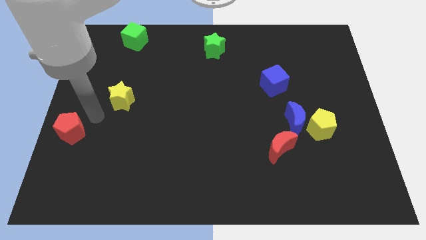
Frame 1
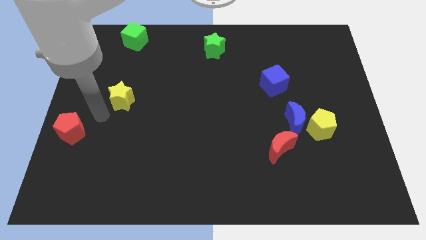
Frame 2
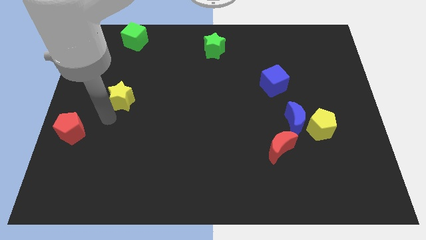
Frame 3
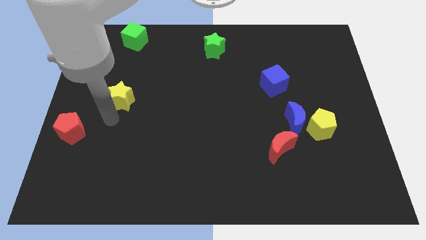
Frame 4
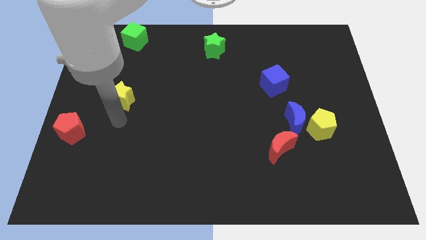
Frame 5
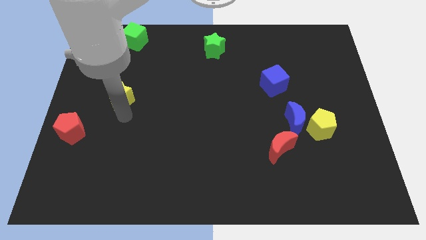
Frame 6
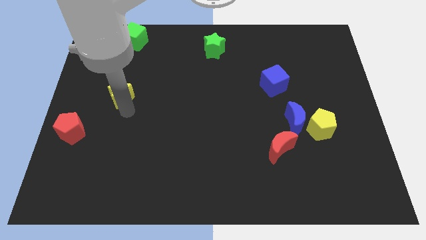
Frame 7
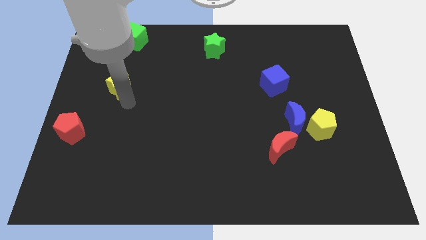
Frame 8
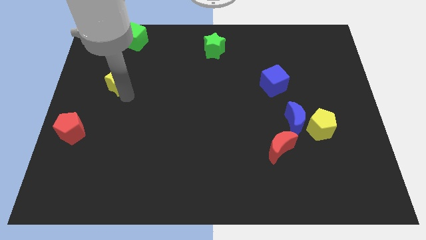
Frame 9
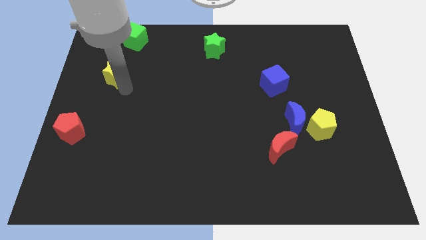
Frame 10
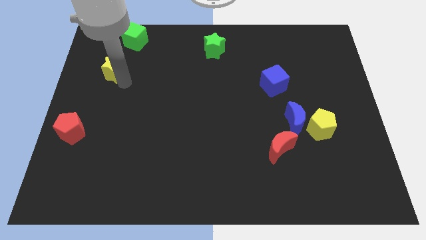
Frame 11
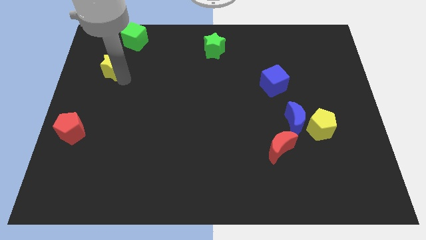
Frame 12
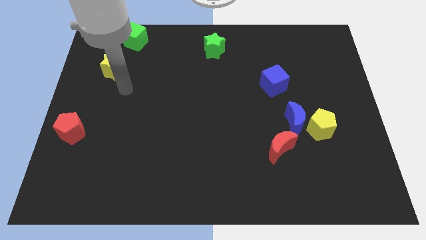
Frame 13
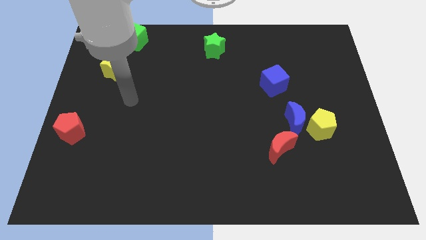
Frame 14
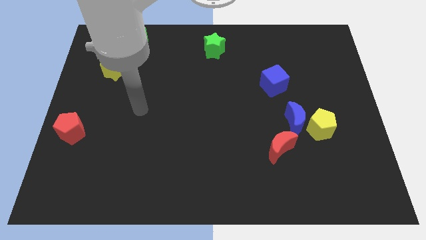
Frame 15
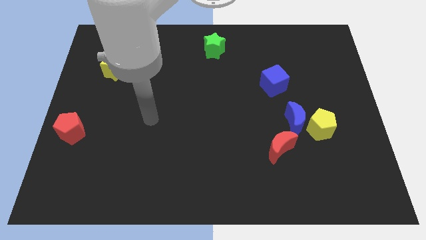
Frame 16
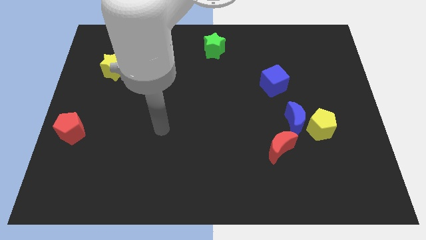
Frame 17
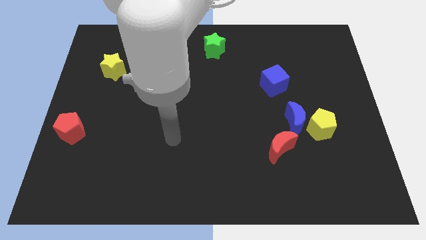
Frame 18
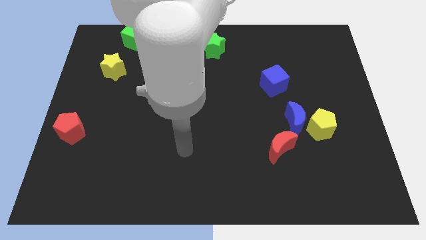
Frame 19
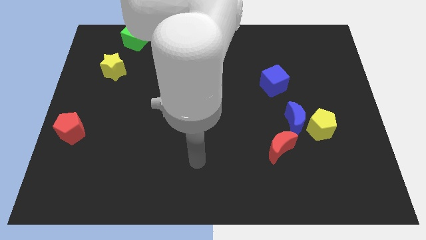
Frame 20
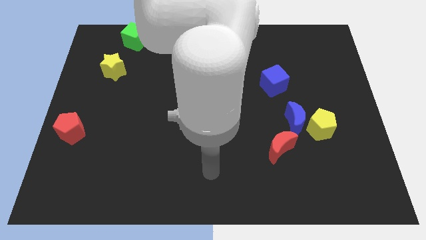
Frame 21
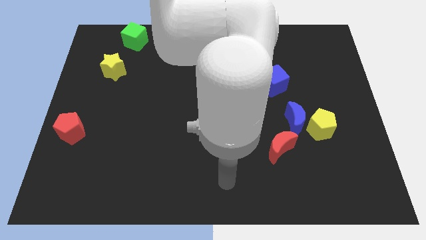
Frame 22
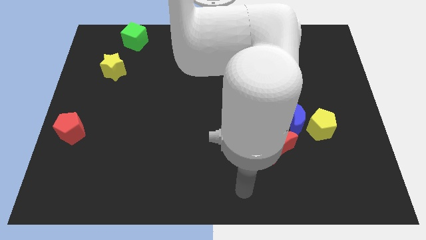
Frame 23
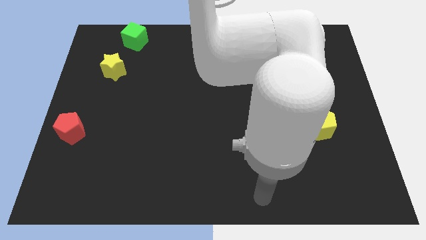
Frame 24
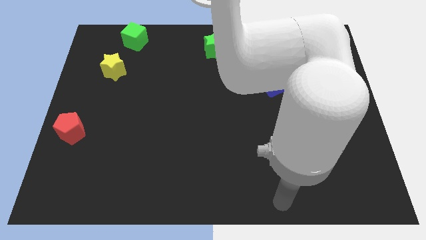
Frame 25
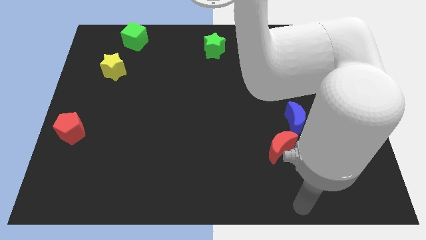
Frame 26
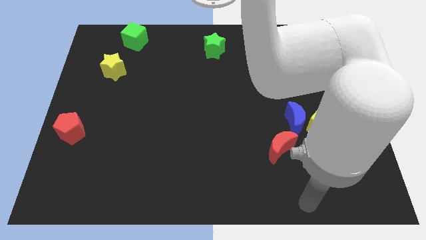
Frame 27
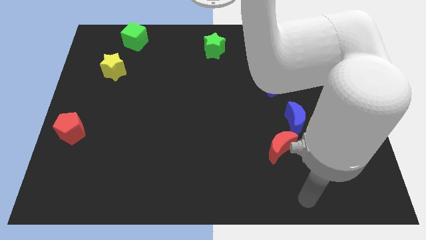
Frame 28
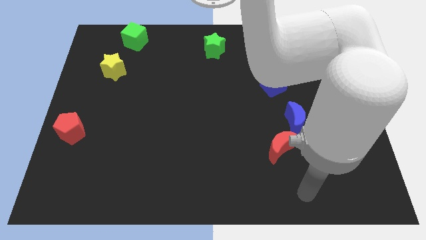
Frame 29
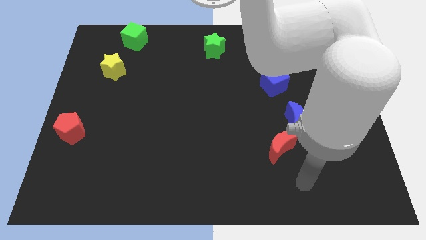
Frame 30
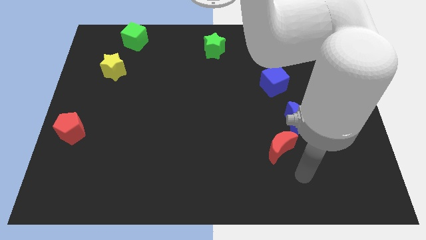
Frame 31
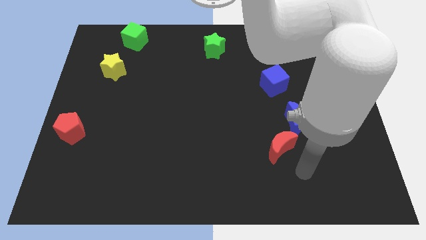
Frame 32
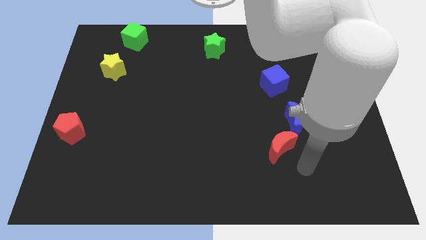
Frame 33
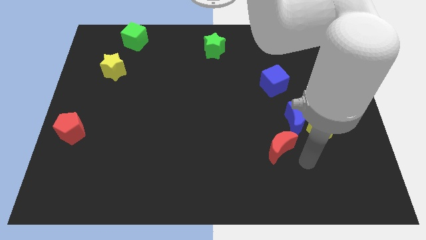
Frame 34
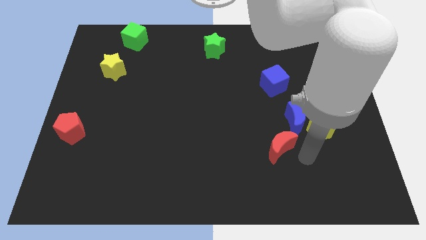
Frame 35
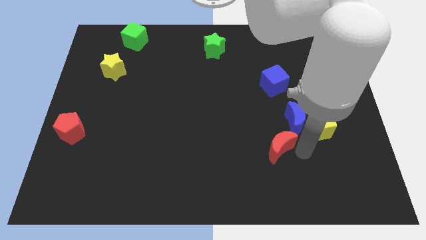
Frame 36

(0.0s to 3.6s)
push the yellow star below the green cube
